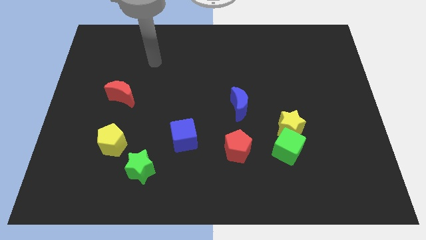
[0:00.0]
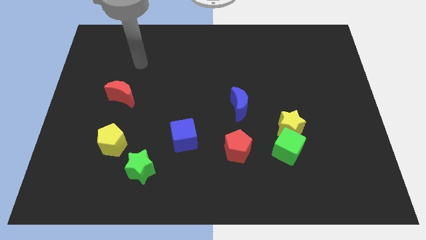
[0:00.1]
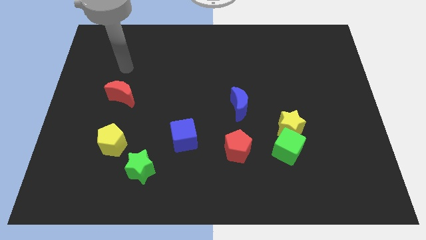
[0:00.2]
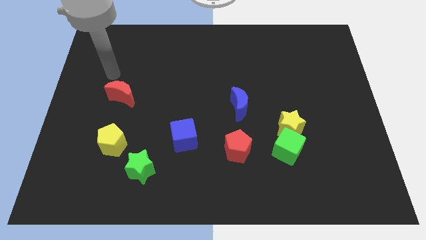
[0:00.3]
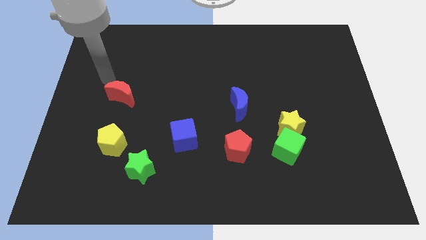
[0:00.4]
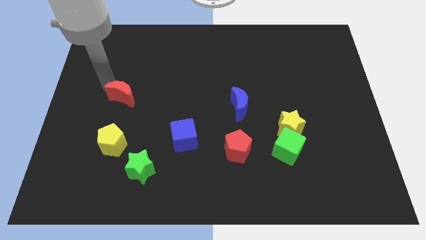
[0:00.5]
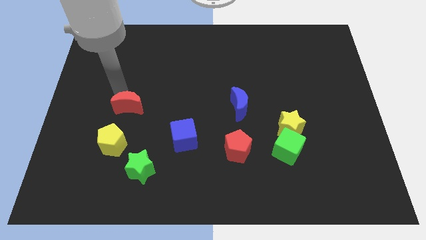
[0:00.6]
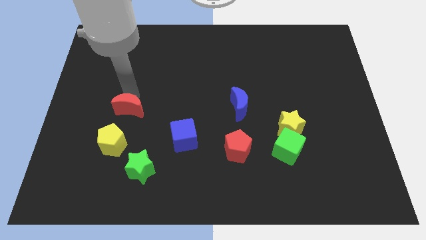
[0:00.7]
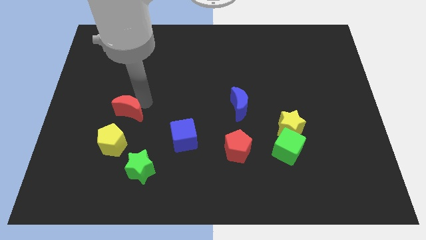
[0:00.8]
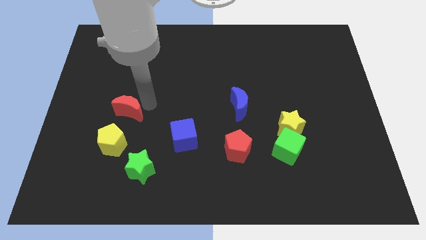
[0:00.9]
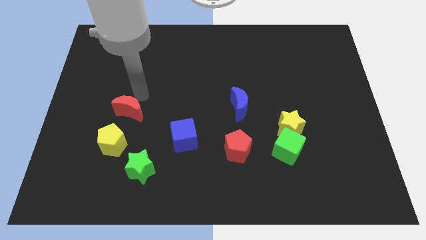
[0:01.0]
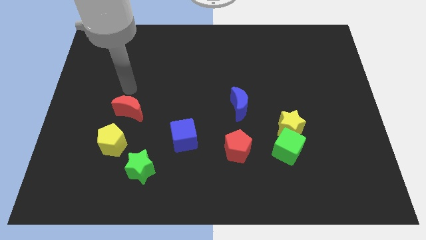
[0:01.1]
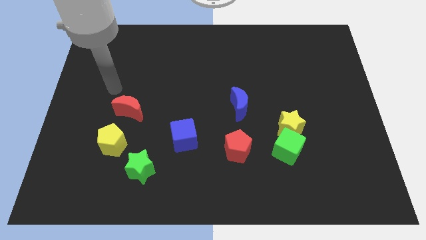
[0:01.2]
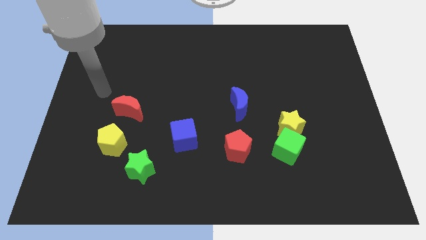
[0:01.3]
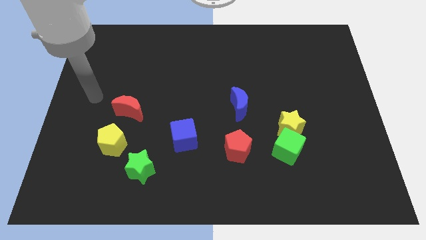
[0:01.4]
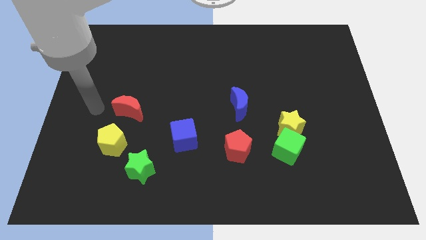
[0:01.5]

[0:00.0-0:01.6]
push the red moon downwards

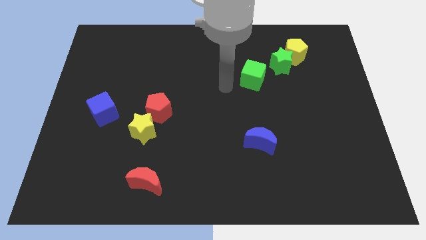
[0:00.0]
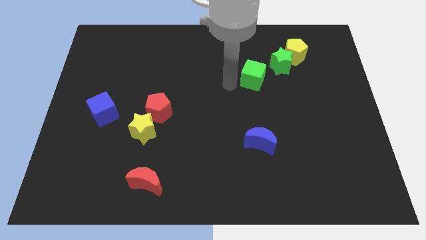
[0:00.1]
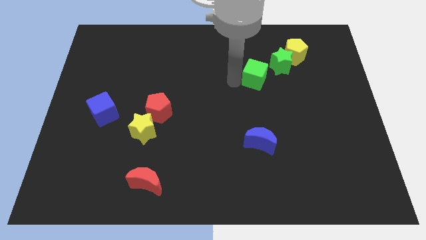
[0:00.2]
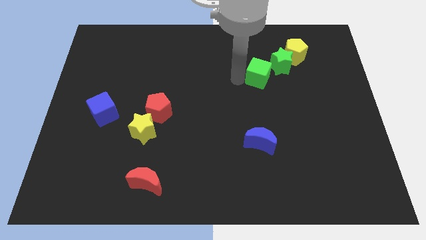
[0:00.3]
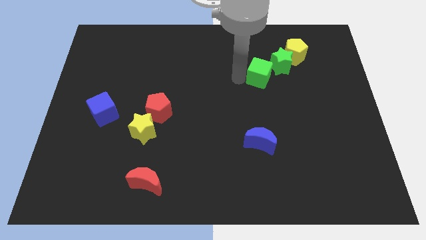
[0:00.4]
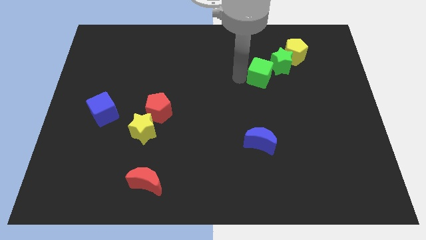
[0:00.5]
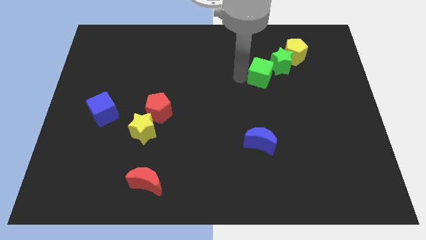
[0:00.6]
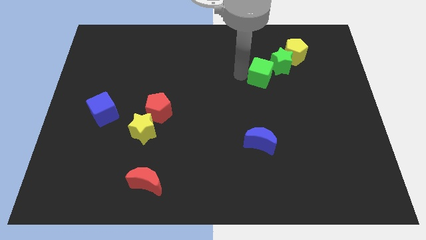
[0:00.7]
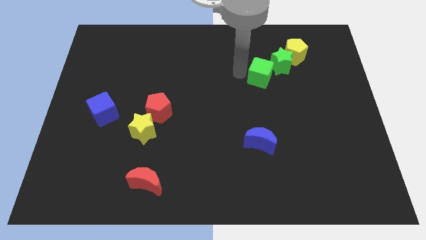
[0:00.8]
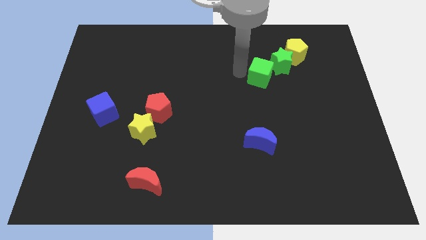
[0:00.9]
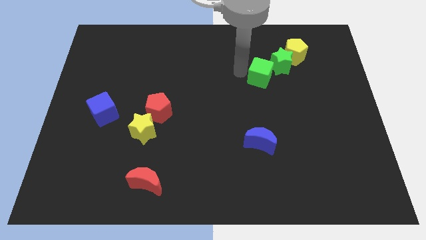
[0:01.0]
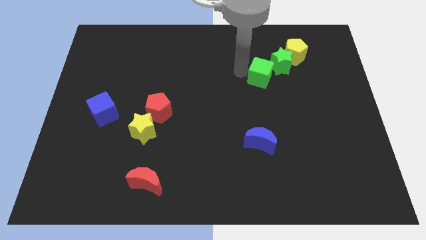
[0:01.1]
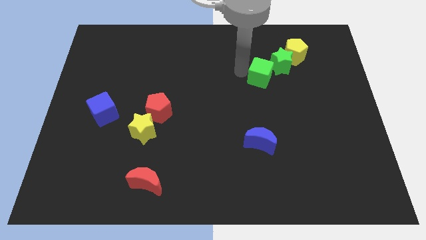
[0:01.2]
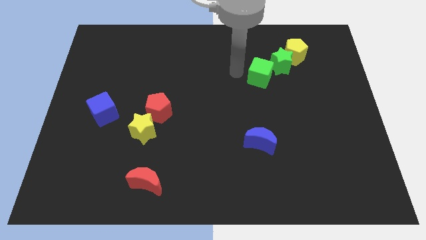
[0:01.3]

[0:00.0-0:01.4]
place the green cube diagonal bottom left to green star

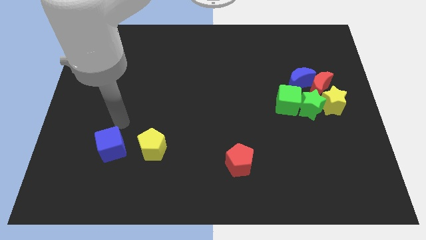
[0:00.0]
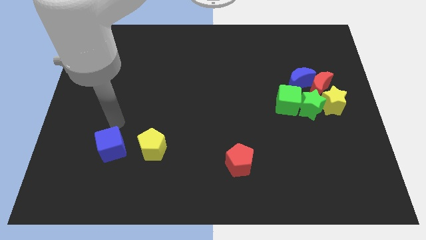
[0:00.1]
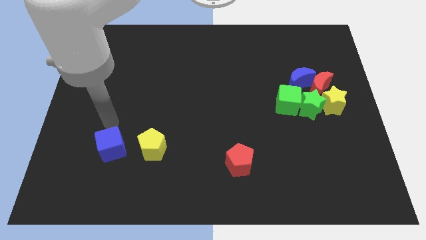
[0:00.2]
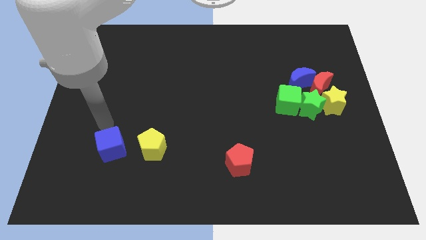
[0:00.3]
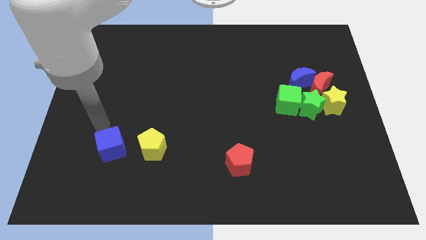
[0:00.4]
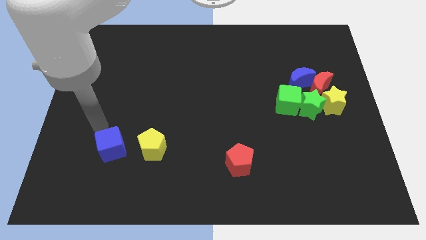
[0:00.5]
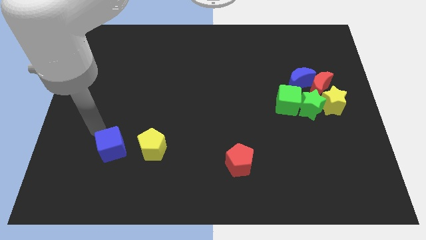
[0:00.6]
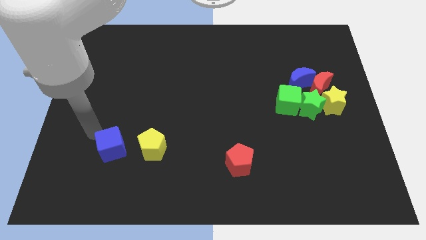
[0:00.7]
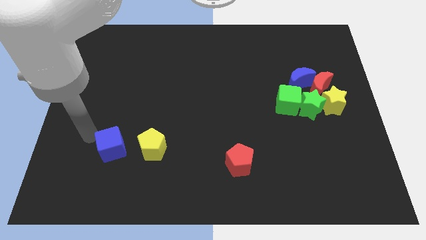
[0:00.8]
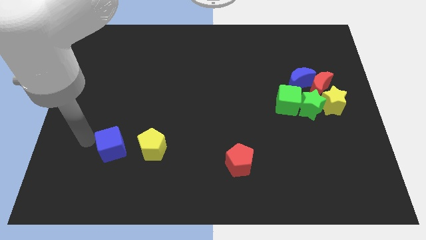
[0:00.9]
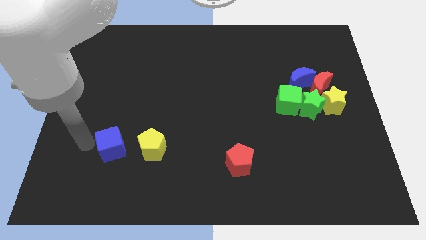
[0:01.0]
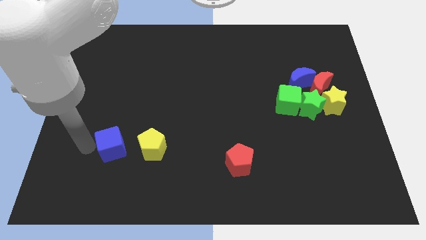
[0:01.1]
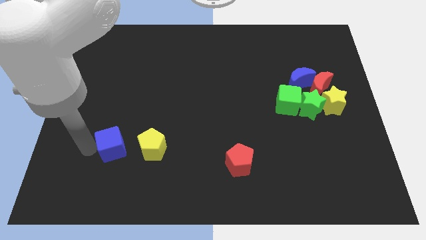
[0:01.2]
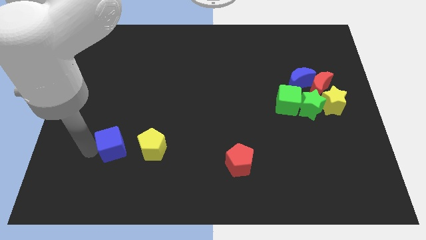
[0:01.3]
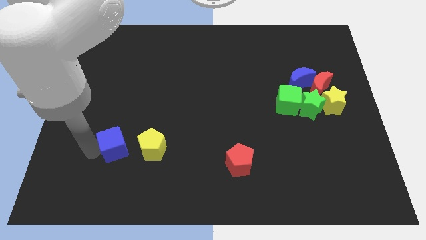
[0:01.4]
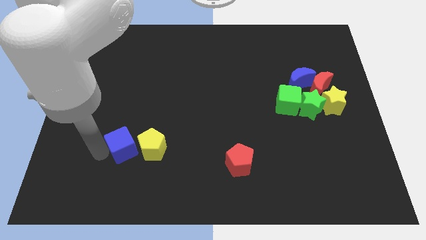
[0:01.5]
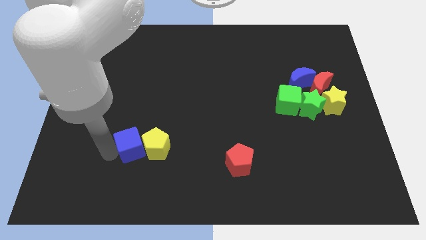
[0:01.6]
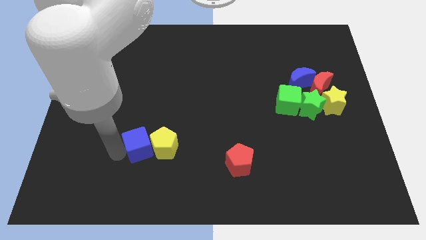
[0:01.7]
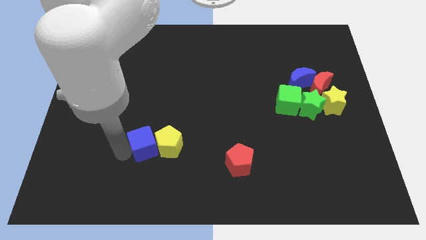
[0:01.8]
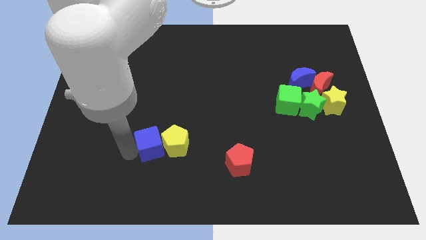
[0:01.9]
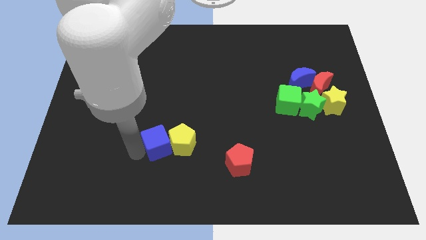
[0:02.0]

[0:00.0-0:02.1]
move blue cube into yellow pentagon

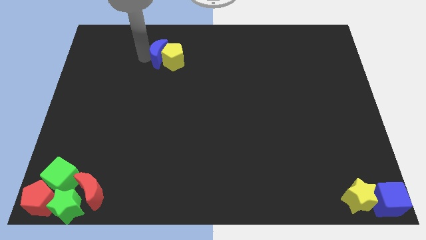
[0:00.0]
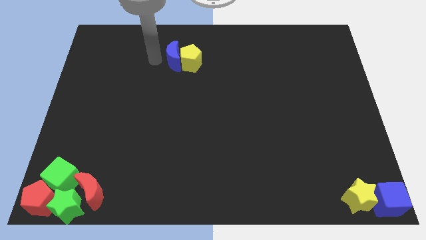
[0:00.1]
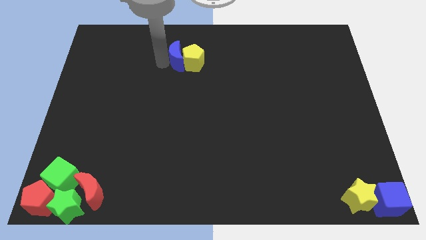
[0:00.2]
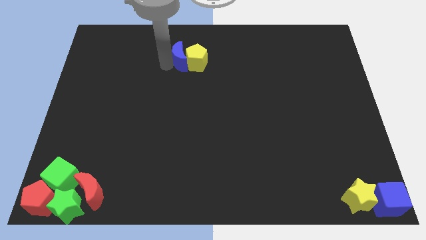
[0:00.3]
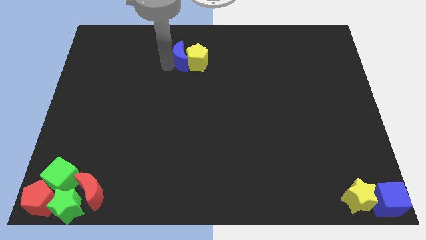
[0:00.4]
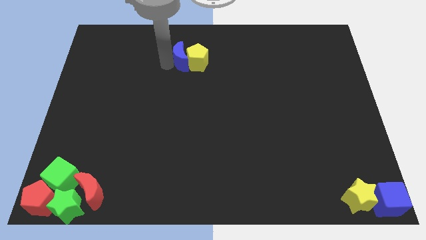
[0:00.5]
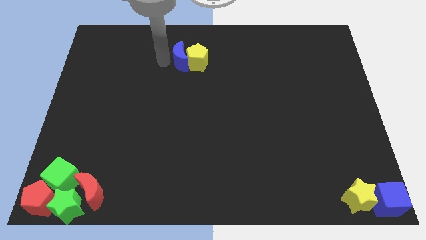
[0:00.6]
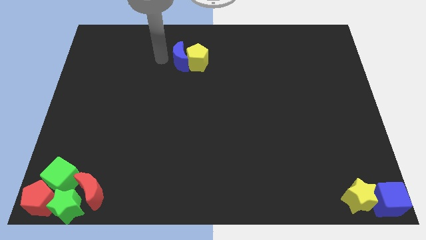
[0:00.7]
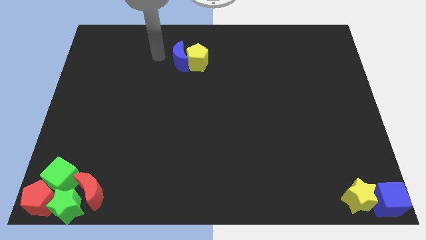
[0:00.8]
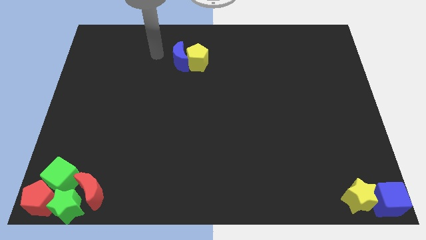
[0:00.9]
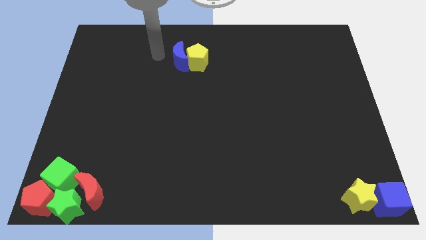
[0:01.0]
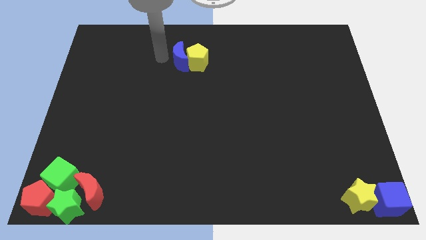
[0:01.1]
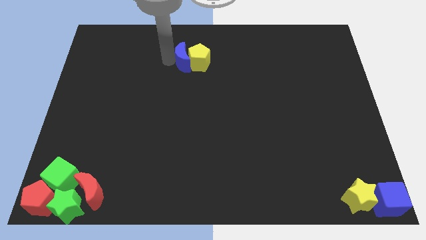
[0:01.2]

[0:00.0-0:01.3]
move the yellow pentagon and blue crescent to the top center of the board

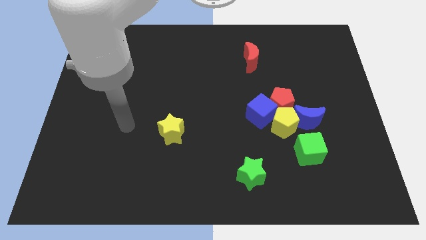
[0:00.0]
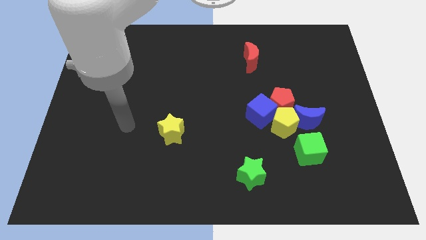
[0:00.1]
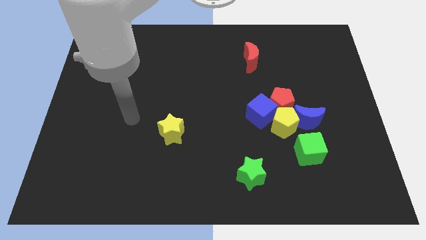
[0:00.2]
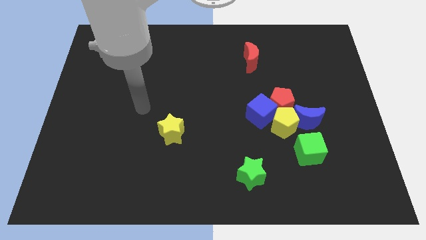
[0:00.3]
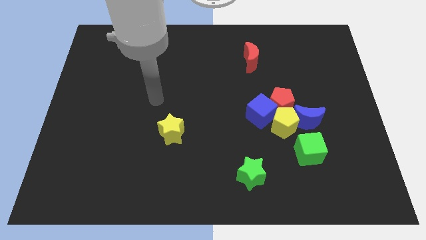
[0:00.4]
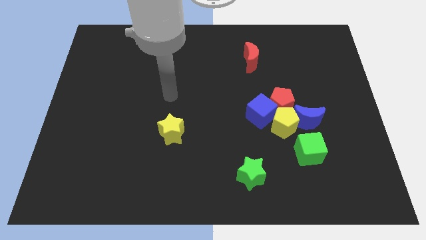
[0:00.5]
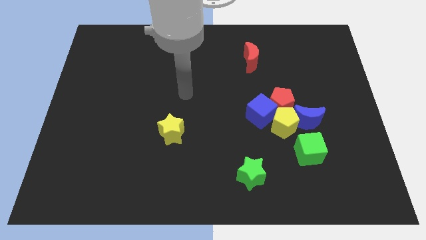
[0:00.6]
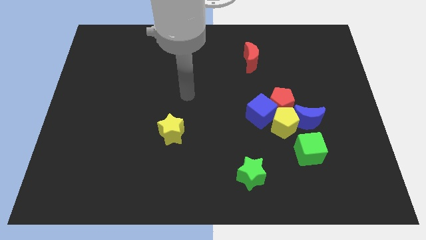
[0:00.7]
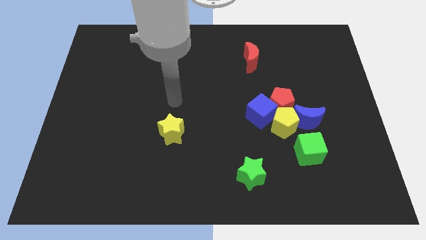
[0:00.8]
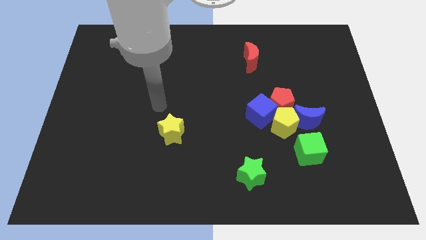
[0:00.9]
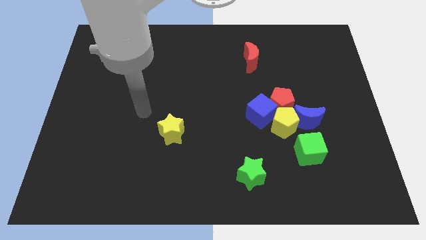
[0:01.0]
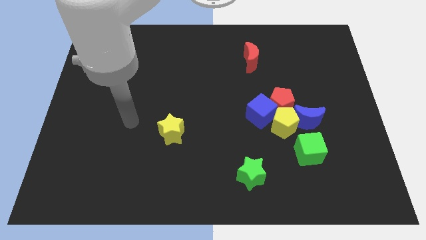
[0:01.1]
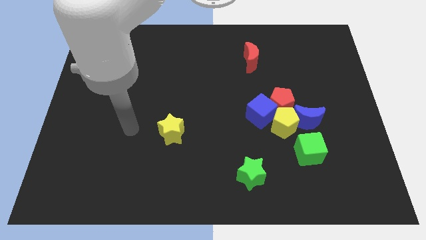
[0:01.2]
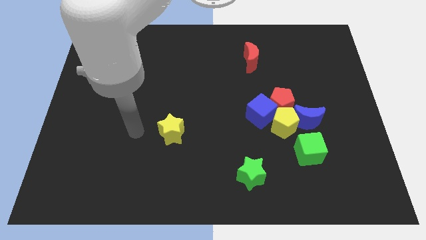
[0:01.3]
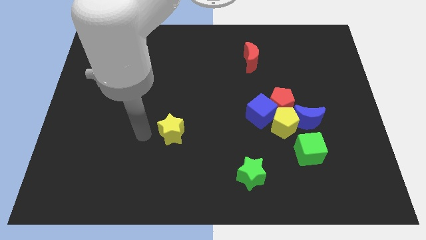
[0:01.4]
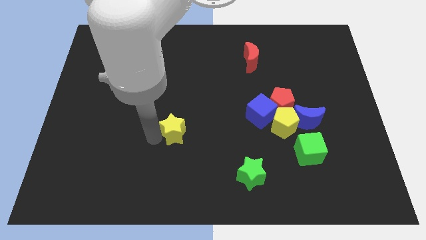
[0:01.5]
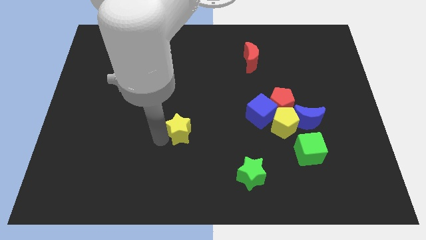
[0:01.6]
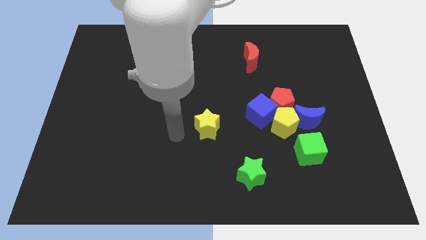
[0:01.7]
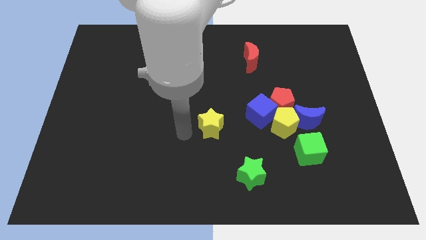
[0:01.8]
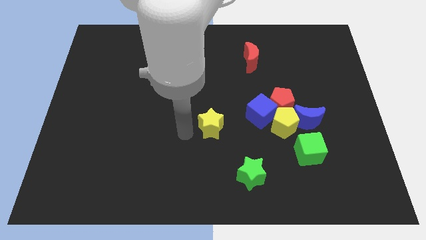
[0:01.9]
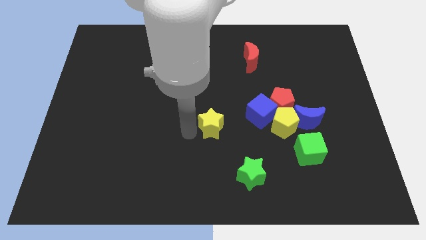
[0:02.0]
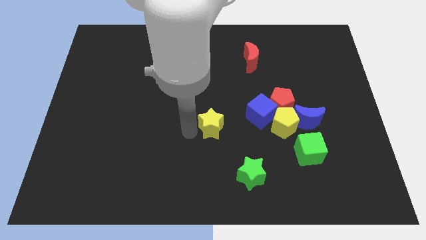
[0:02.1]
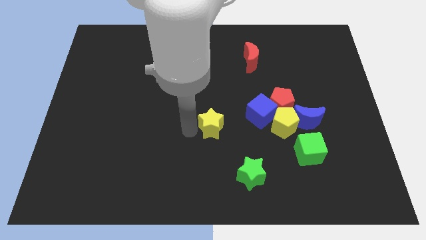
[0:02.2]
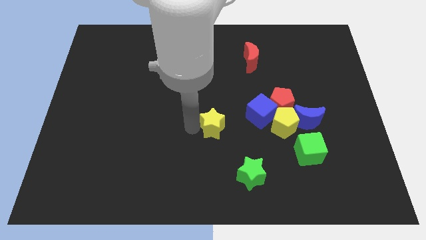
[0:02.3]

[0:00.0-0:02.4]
move the yellow star towards the blue cube

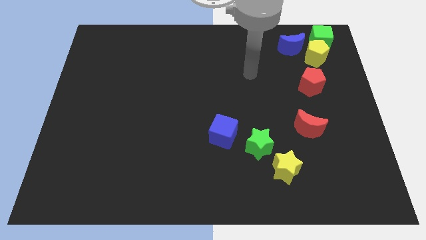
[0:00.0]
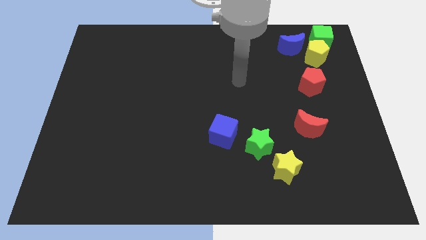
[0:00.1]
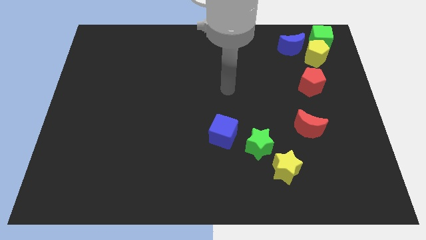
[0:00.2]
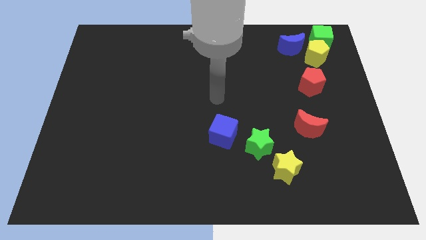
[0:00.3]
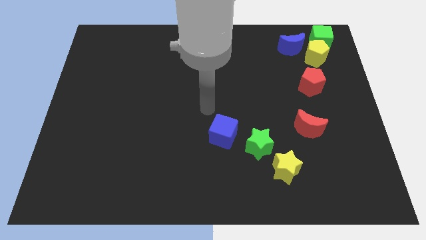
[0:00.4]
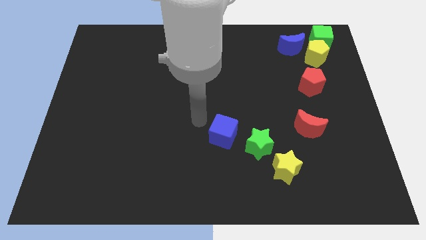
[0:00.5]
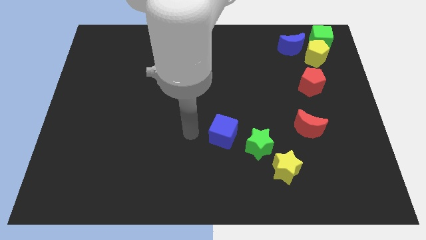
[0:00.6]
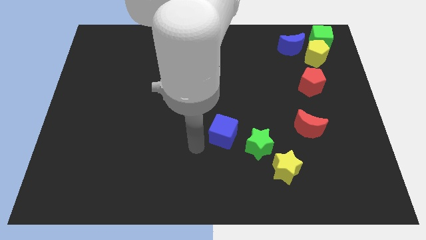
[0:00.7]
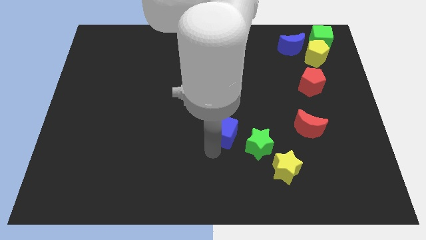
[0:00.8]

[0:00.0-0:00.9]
place arm at the bottom of blue cube
